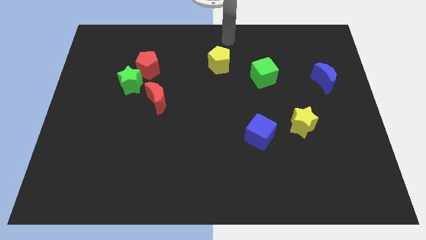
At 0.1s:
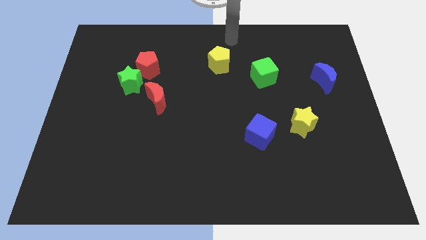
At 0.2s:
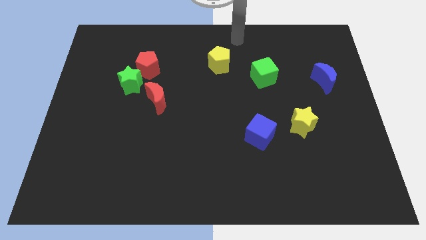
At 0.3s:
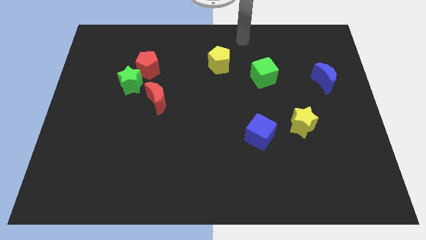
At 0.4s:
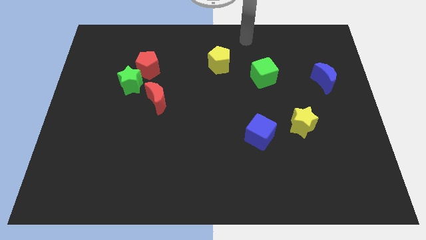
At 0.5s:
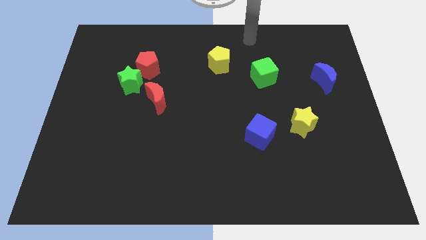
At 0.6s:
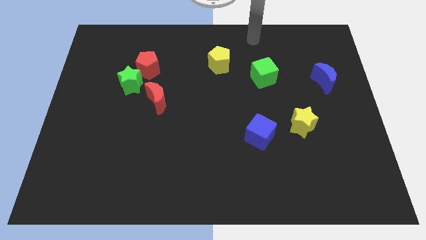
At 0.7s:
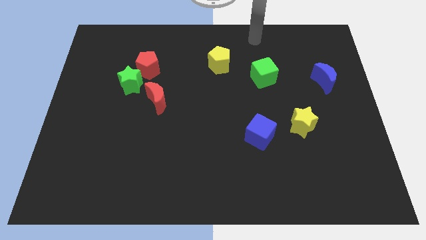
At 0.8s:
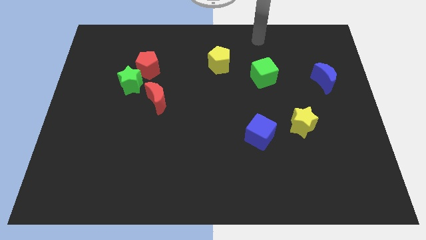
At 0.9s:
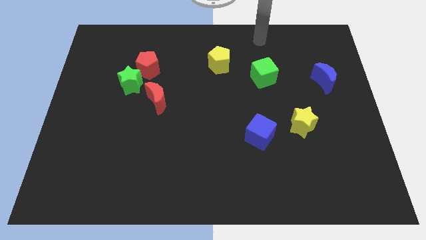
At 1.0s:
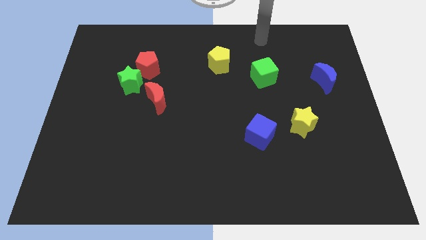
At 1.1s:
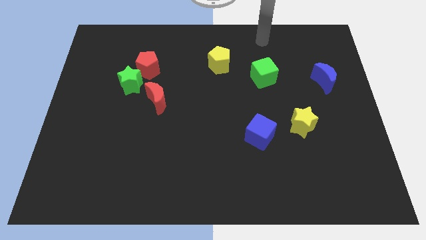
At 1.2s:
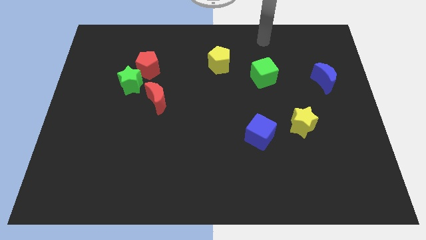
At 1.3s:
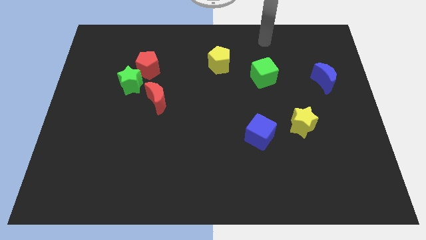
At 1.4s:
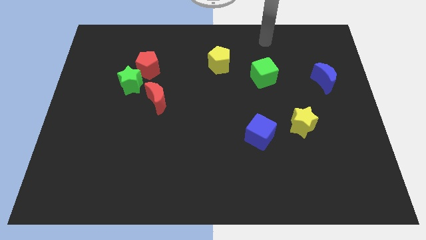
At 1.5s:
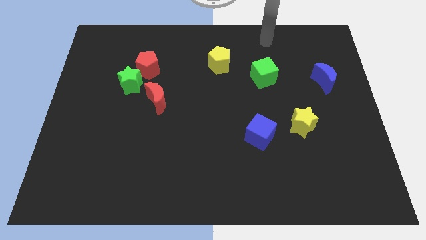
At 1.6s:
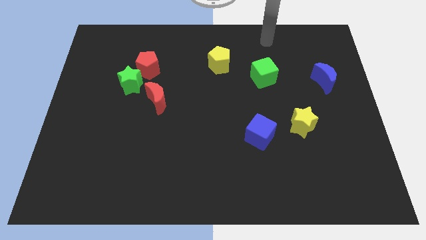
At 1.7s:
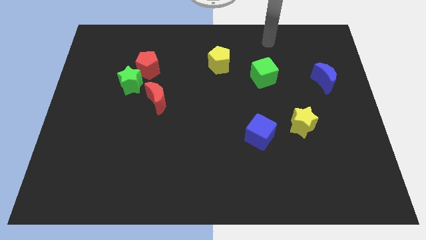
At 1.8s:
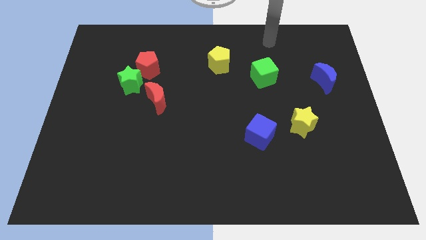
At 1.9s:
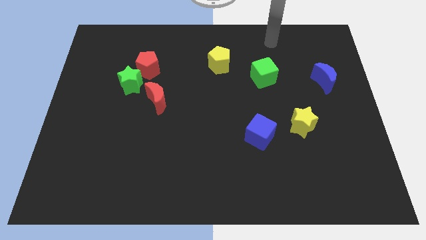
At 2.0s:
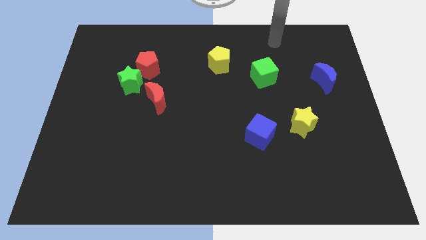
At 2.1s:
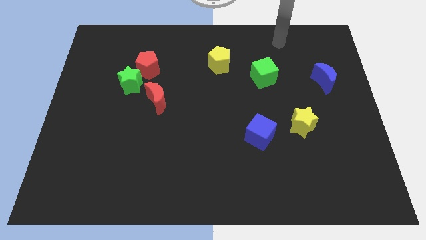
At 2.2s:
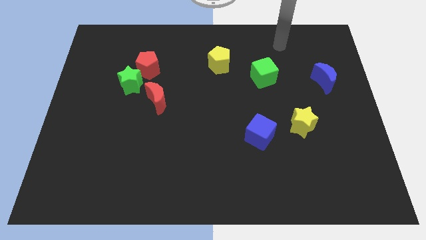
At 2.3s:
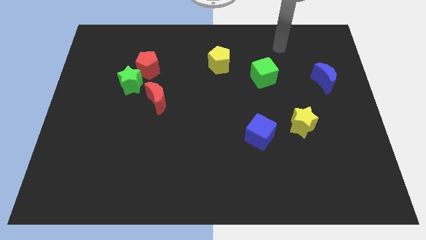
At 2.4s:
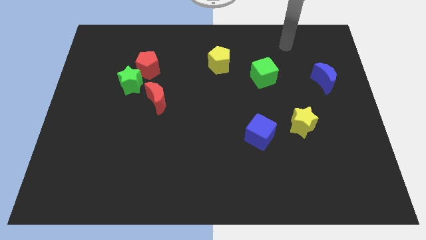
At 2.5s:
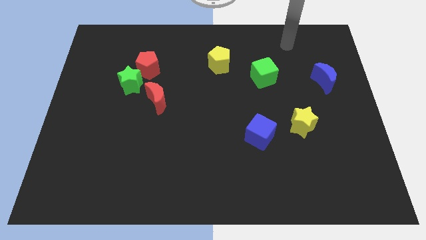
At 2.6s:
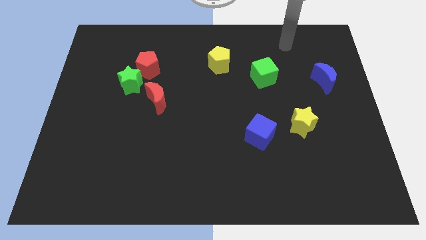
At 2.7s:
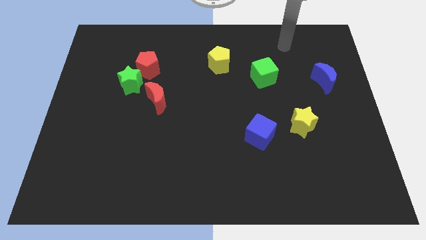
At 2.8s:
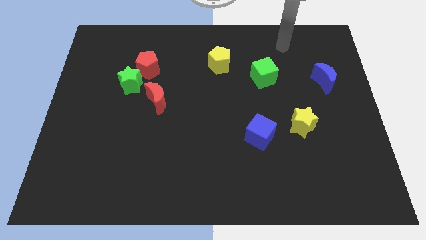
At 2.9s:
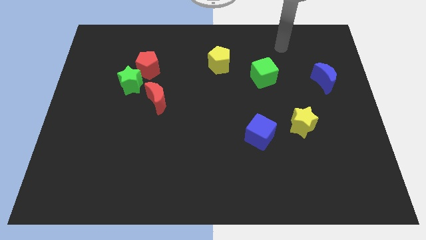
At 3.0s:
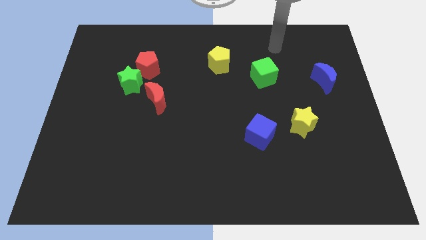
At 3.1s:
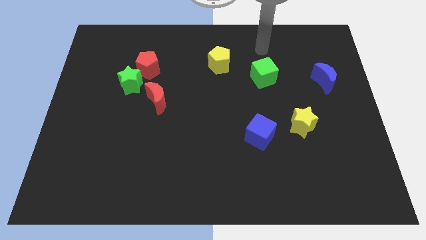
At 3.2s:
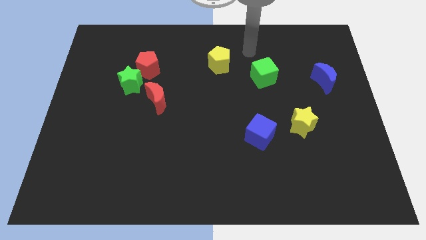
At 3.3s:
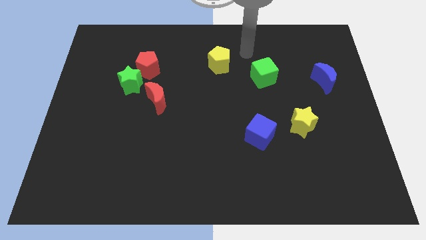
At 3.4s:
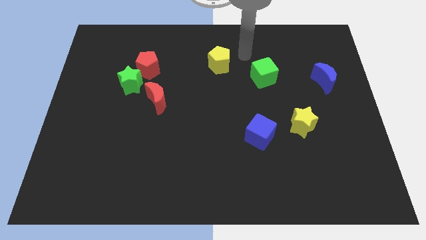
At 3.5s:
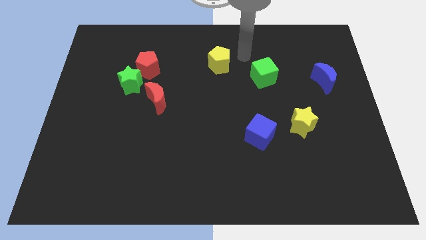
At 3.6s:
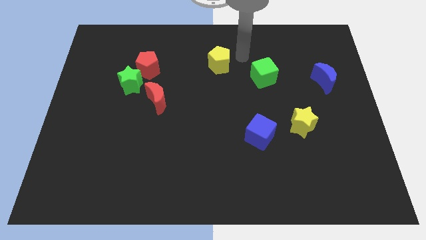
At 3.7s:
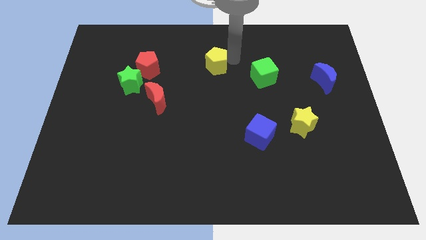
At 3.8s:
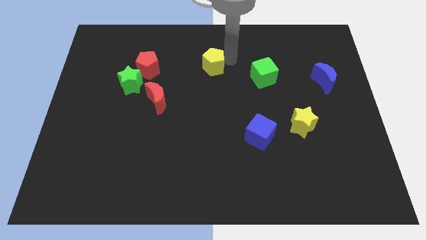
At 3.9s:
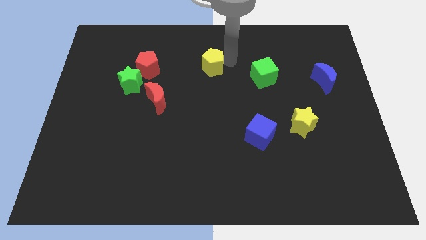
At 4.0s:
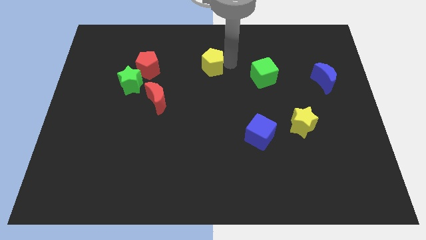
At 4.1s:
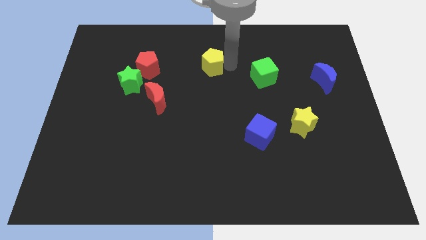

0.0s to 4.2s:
slightly touch the yellow pentagon

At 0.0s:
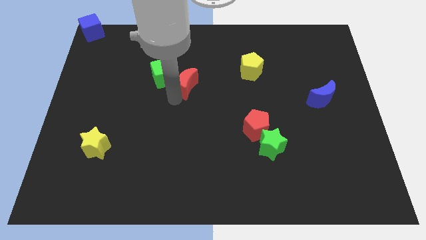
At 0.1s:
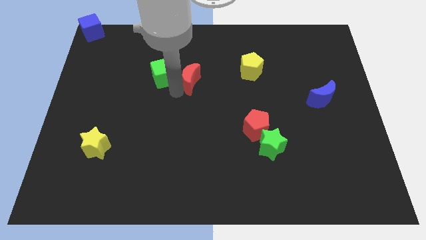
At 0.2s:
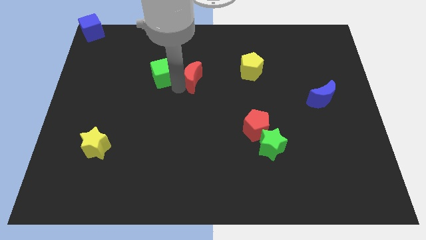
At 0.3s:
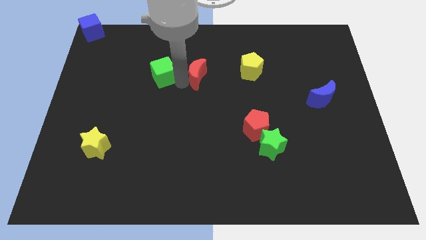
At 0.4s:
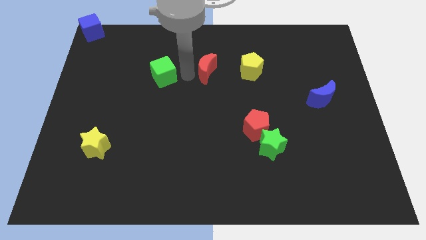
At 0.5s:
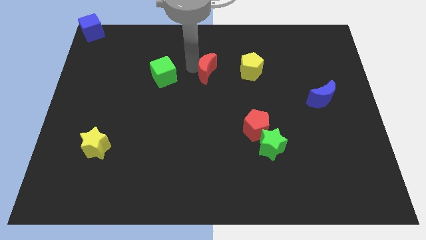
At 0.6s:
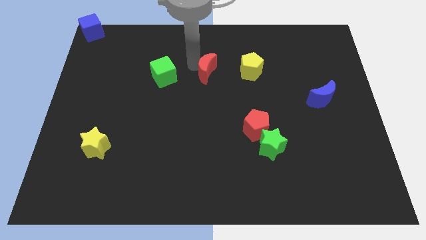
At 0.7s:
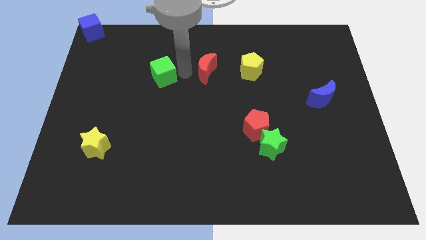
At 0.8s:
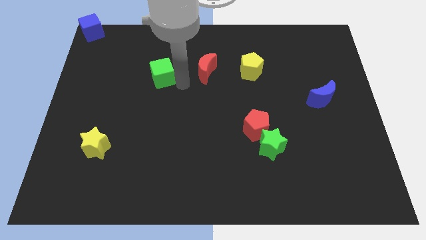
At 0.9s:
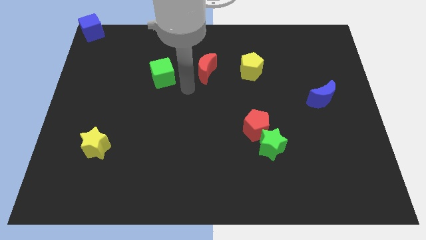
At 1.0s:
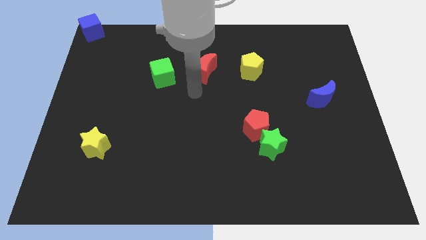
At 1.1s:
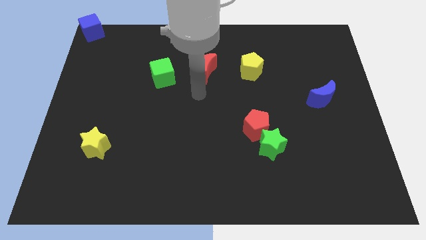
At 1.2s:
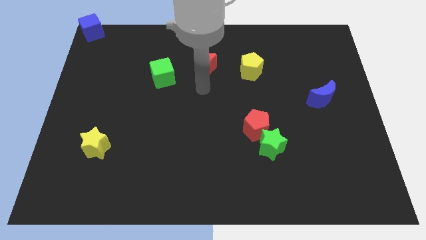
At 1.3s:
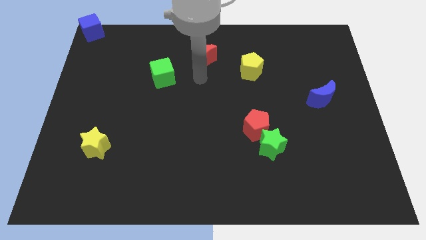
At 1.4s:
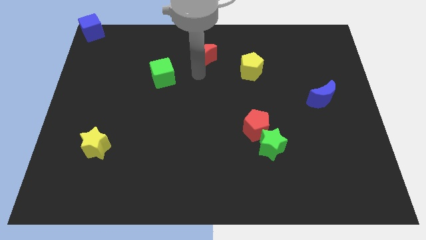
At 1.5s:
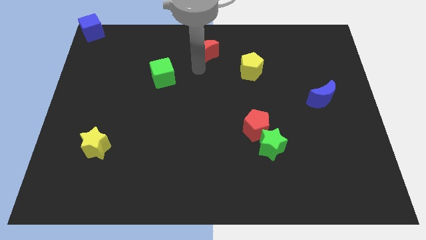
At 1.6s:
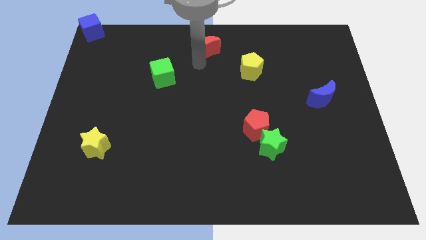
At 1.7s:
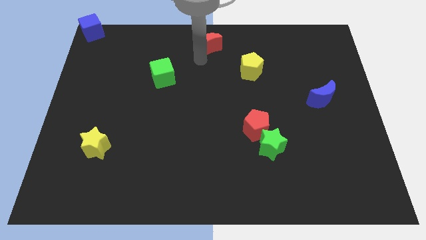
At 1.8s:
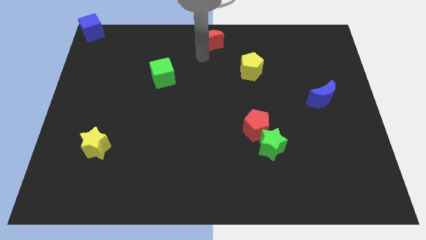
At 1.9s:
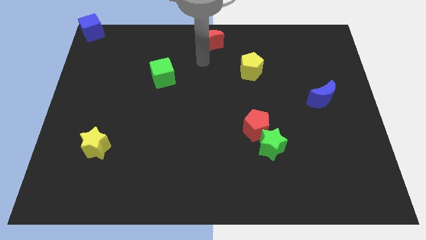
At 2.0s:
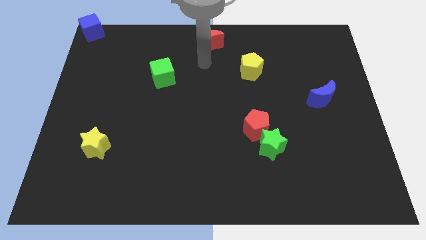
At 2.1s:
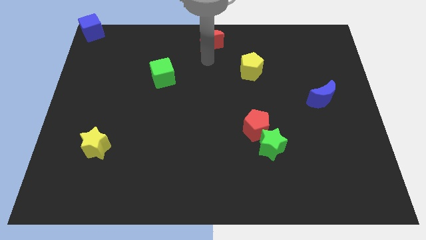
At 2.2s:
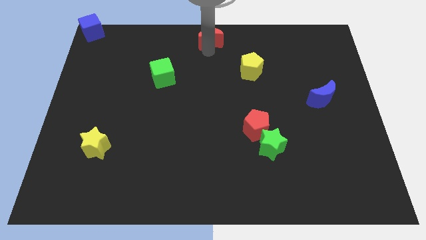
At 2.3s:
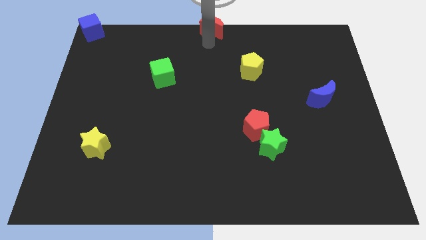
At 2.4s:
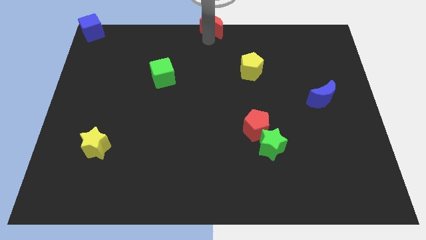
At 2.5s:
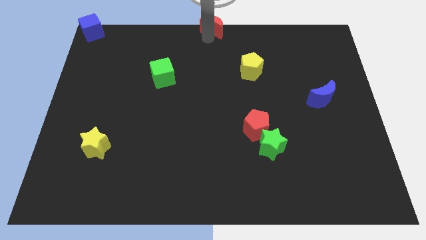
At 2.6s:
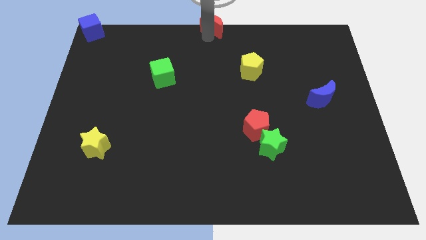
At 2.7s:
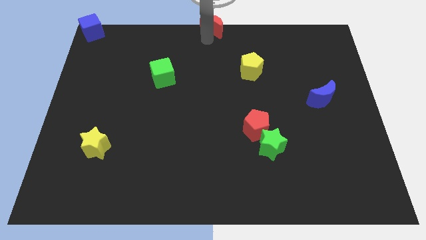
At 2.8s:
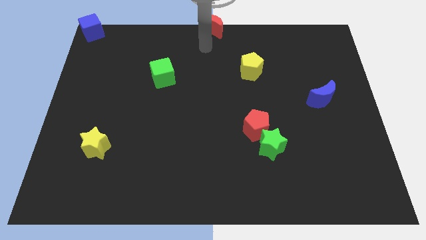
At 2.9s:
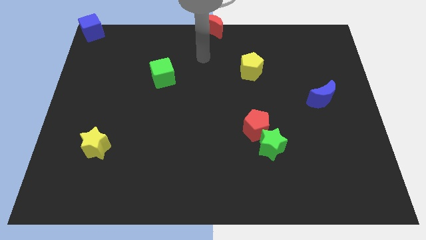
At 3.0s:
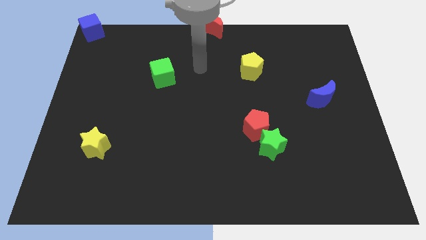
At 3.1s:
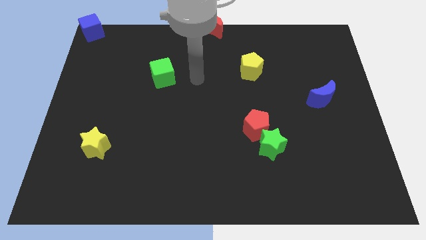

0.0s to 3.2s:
place the red crescent at the top center of the board

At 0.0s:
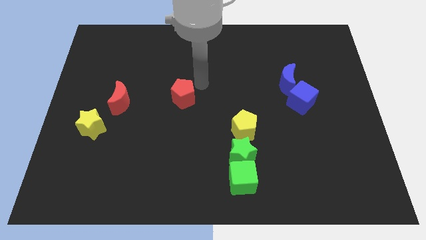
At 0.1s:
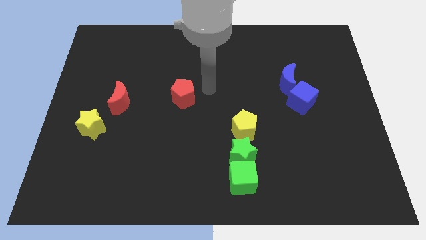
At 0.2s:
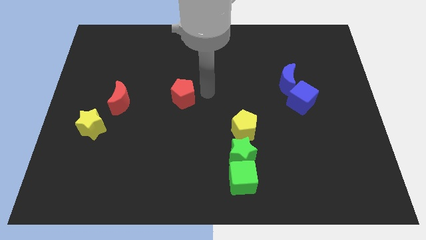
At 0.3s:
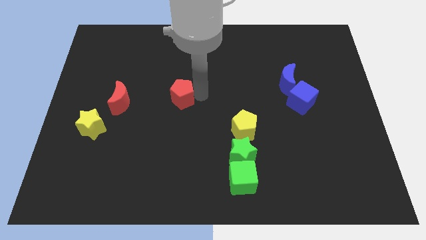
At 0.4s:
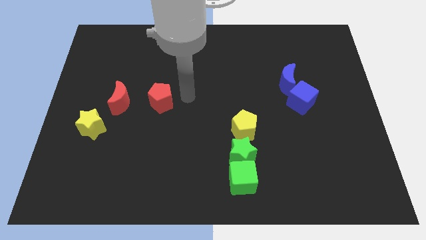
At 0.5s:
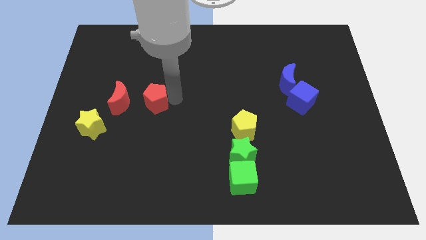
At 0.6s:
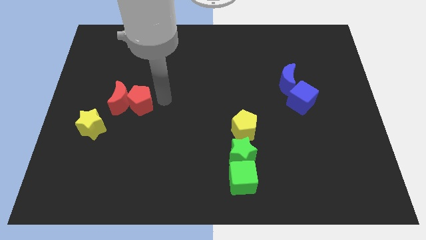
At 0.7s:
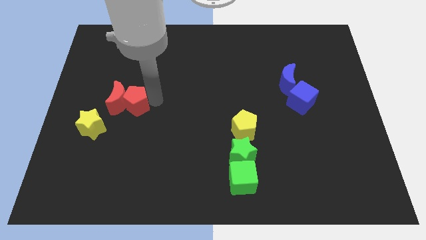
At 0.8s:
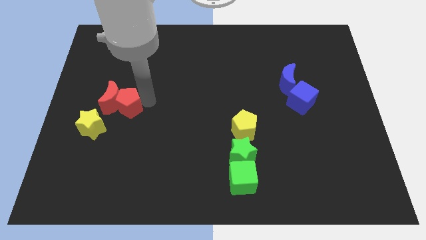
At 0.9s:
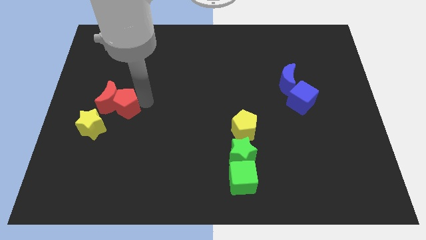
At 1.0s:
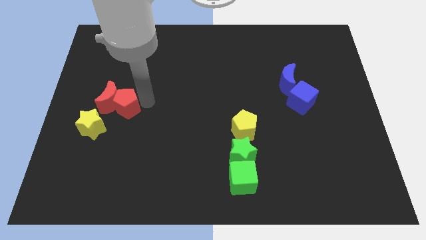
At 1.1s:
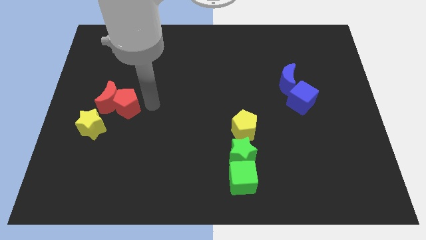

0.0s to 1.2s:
make the red pentagon to touch the red crescent

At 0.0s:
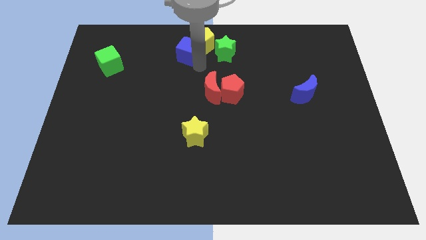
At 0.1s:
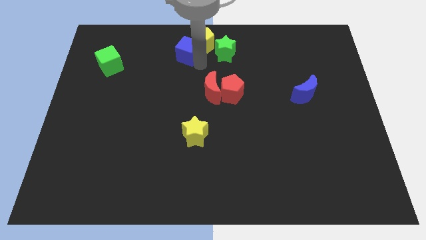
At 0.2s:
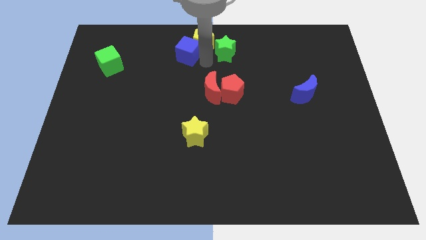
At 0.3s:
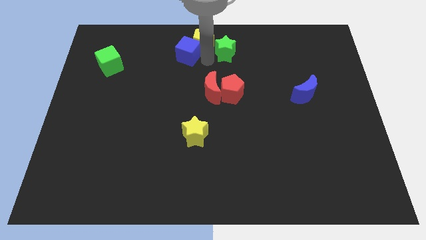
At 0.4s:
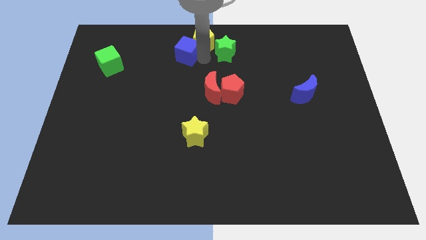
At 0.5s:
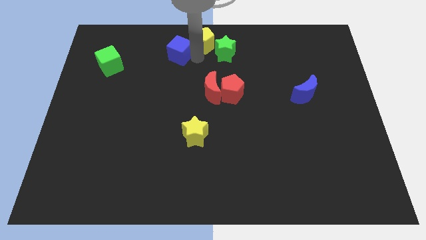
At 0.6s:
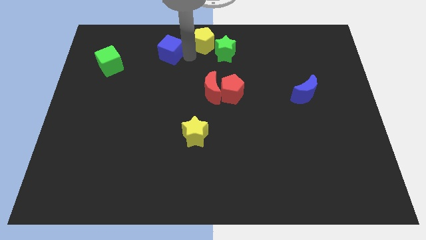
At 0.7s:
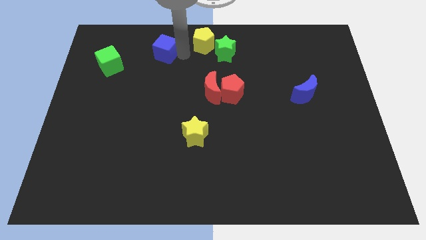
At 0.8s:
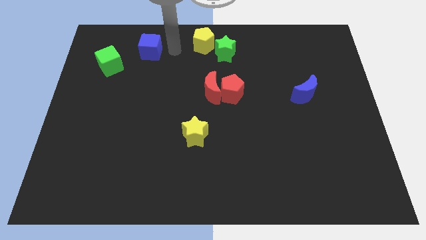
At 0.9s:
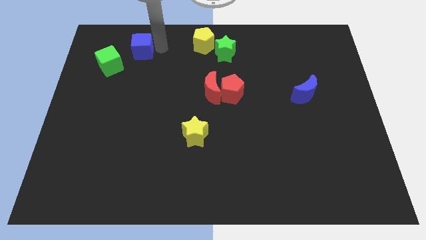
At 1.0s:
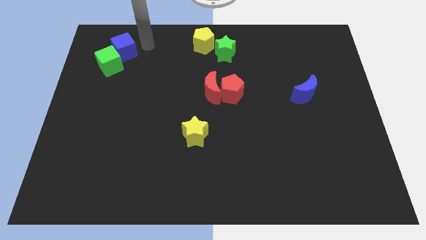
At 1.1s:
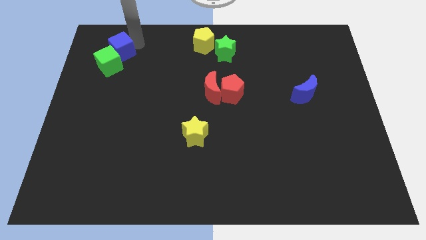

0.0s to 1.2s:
separate the blue cube from yellow pentagon
